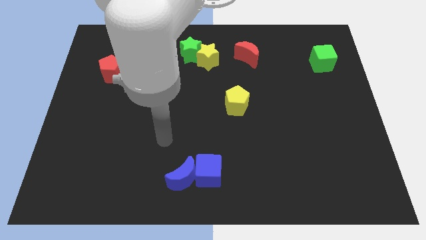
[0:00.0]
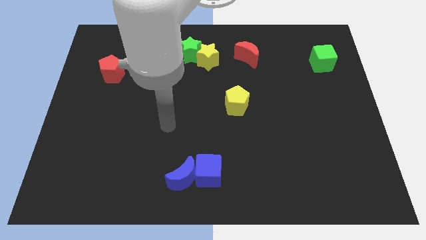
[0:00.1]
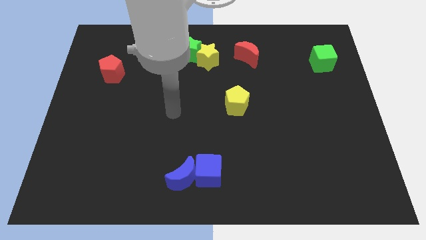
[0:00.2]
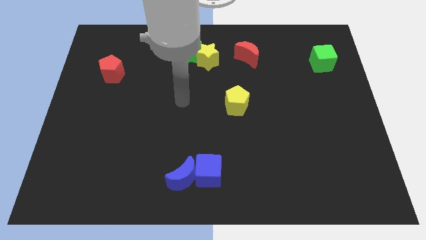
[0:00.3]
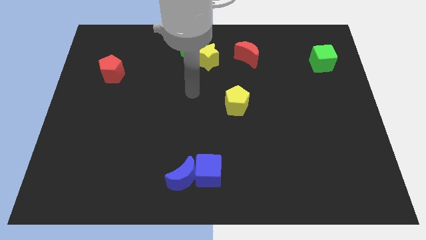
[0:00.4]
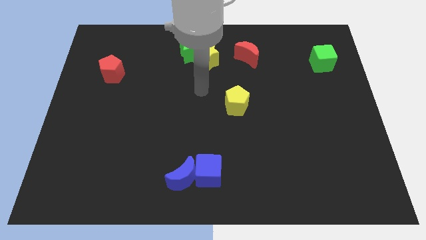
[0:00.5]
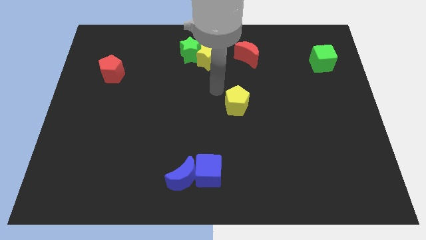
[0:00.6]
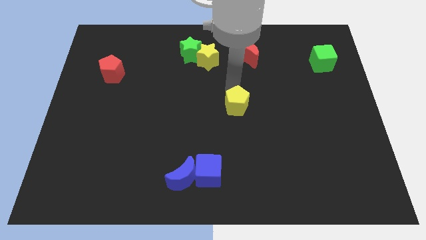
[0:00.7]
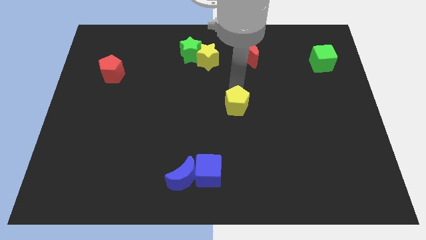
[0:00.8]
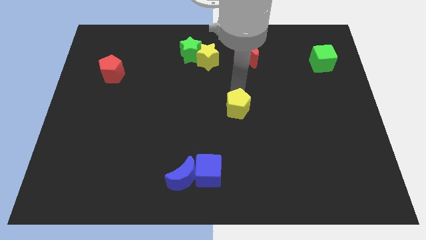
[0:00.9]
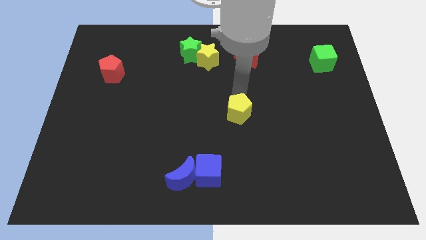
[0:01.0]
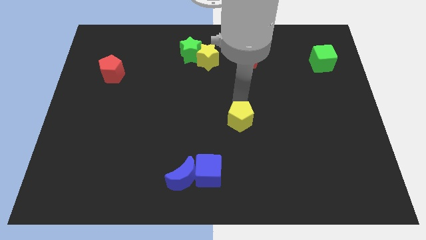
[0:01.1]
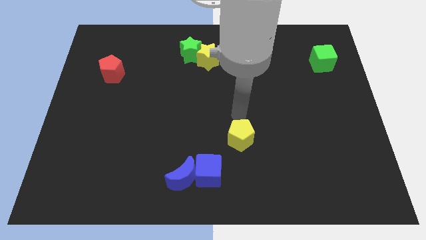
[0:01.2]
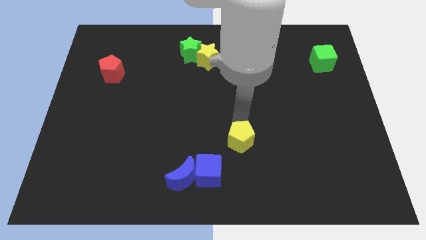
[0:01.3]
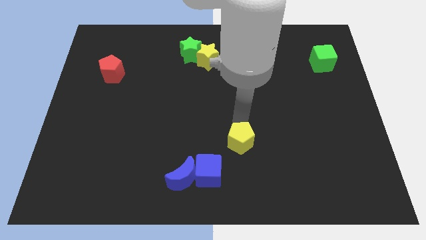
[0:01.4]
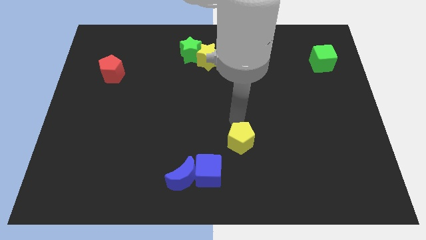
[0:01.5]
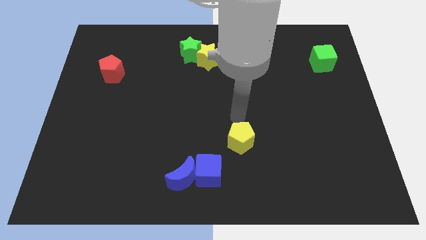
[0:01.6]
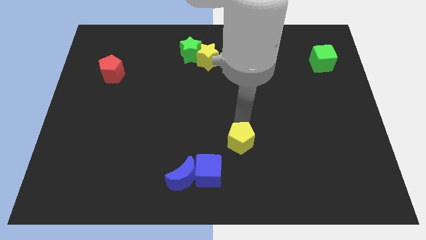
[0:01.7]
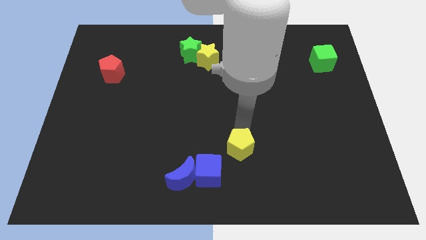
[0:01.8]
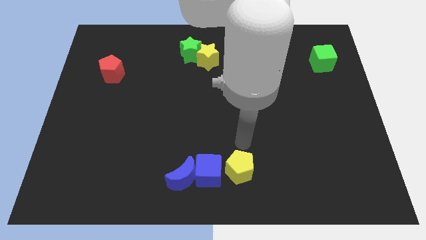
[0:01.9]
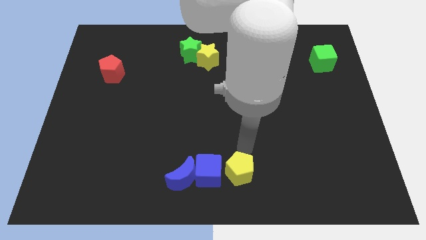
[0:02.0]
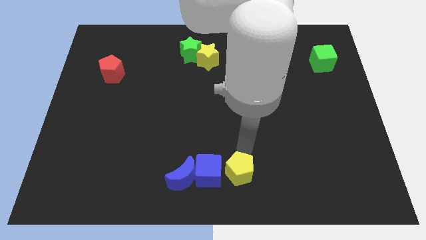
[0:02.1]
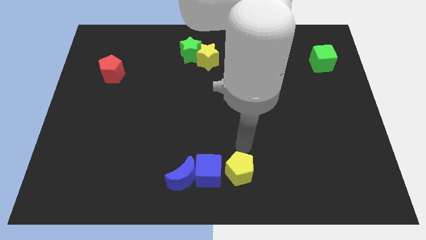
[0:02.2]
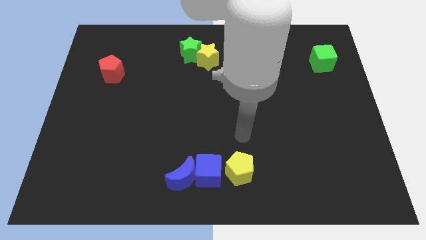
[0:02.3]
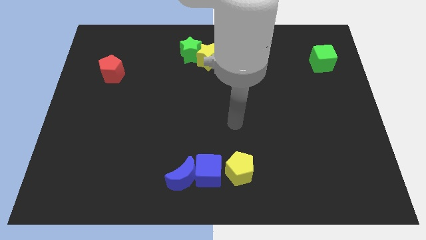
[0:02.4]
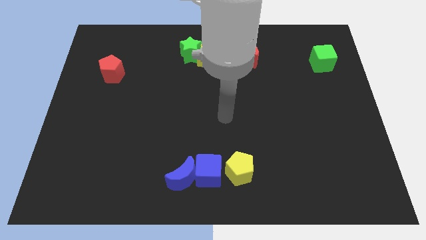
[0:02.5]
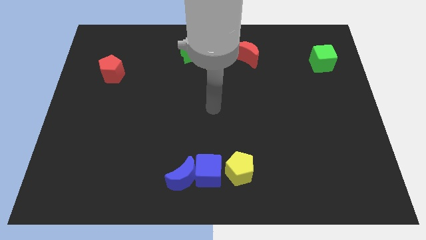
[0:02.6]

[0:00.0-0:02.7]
place the yellow pentagon right to the blue cube

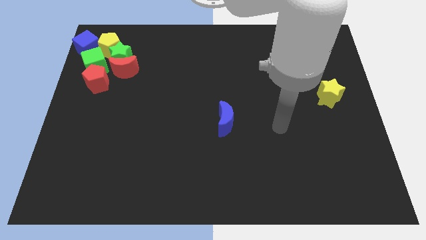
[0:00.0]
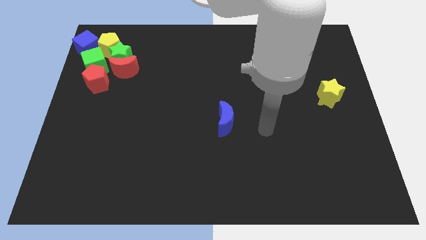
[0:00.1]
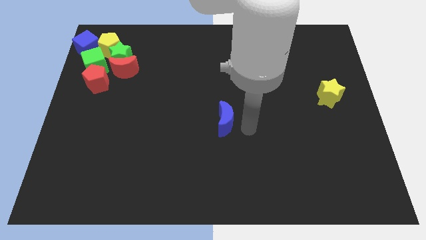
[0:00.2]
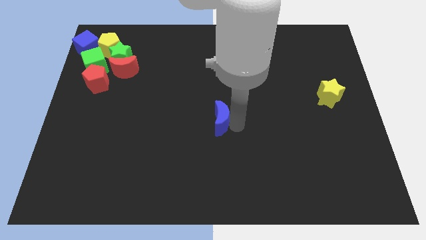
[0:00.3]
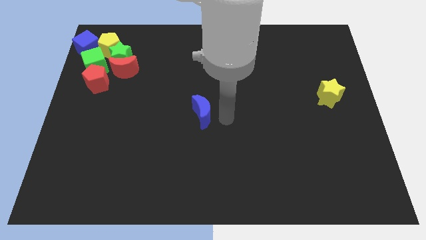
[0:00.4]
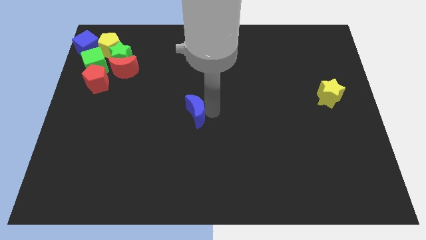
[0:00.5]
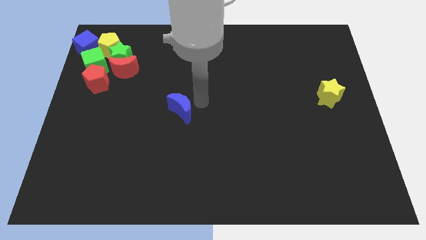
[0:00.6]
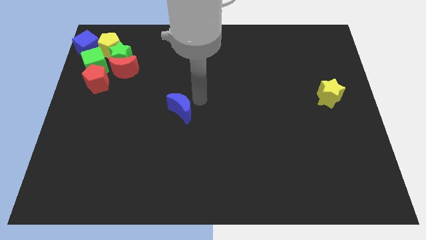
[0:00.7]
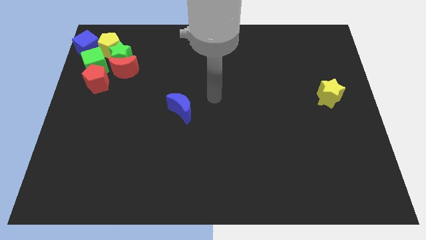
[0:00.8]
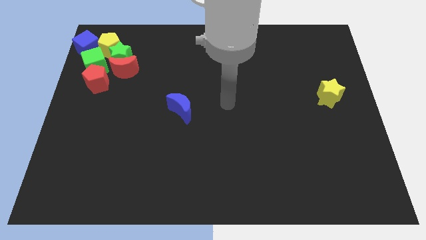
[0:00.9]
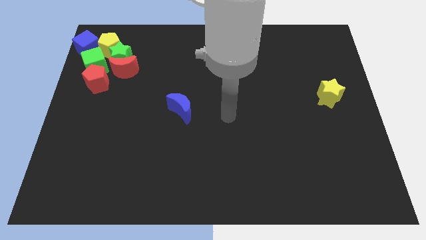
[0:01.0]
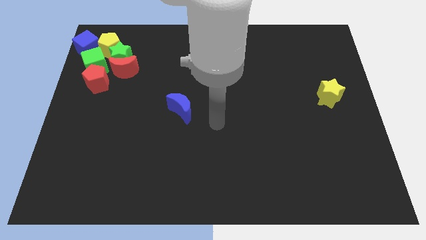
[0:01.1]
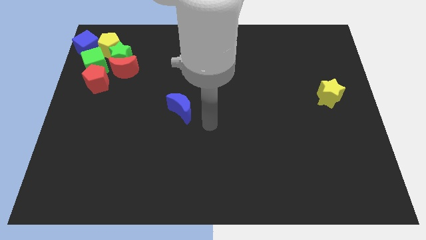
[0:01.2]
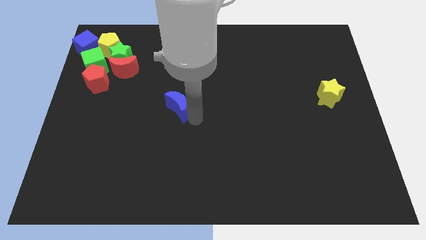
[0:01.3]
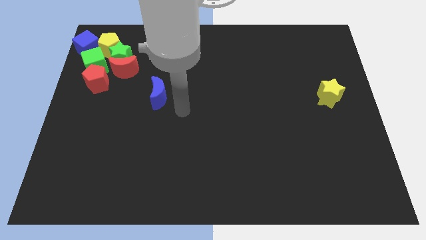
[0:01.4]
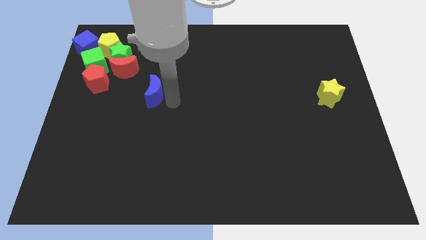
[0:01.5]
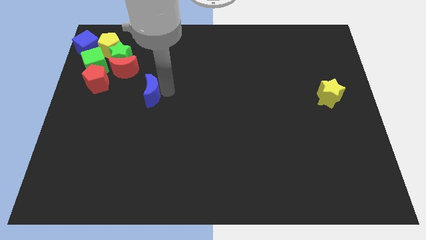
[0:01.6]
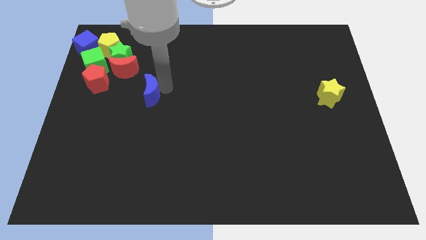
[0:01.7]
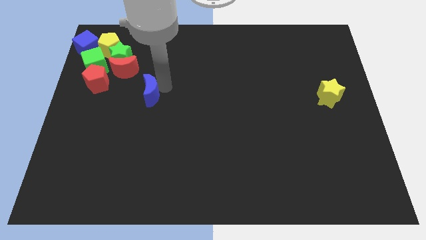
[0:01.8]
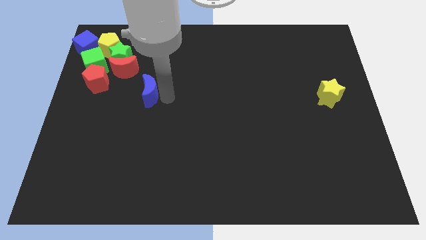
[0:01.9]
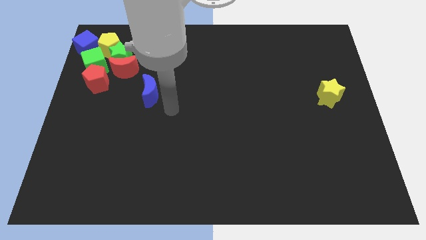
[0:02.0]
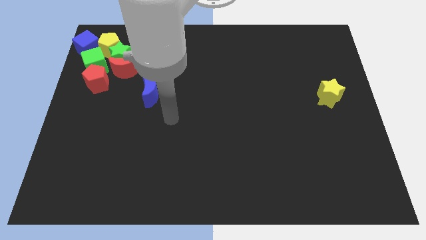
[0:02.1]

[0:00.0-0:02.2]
place the blue moon below the red moon

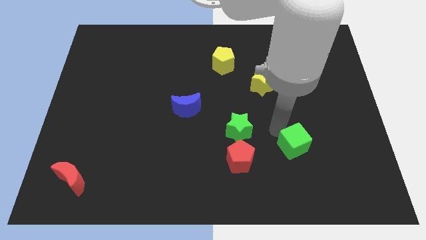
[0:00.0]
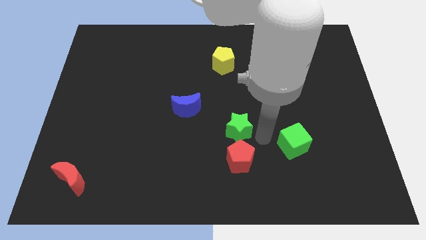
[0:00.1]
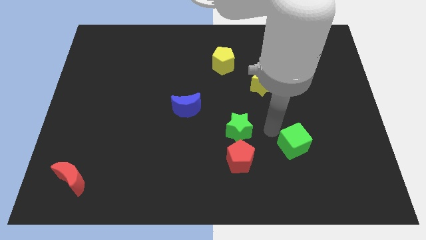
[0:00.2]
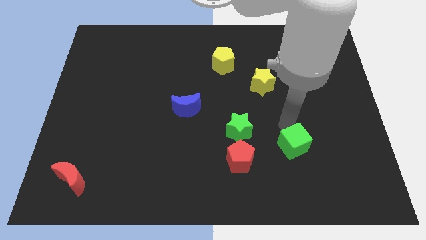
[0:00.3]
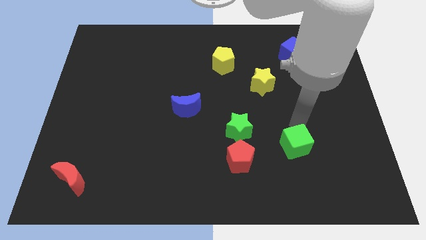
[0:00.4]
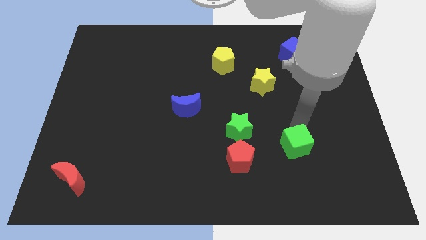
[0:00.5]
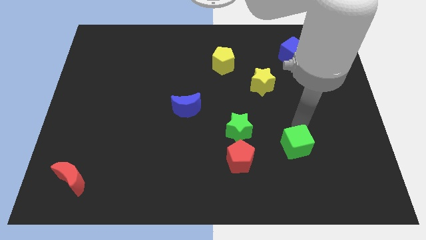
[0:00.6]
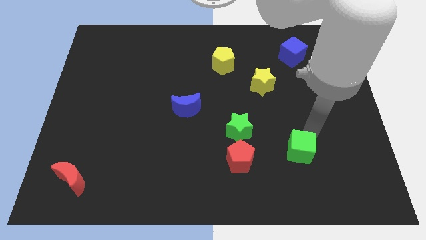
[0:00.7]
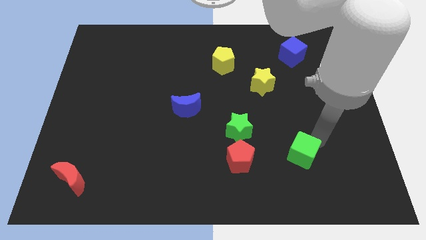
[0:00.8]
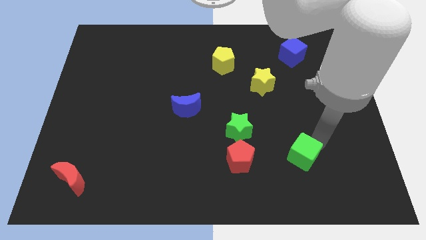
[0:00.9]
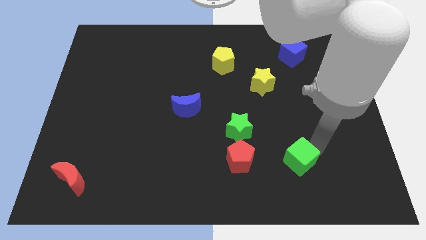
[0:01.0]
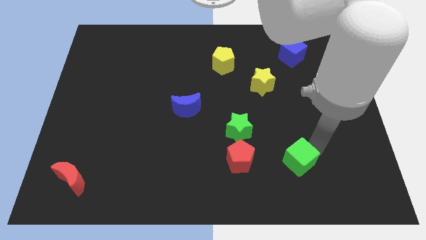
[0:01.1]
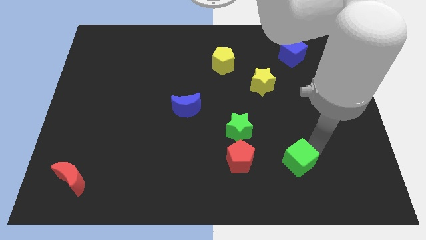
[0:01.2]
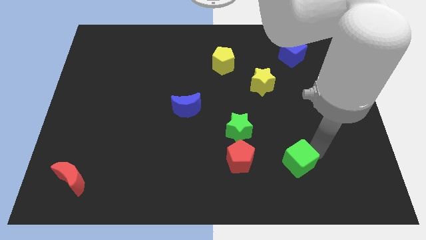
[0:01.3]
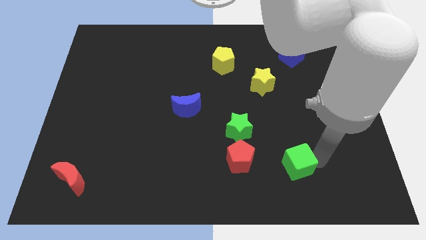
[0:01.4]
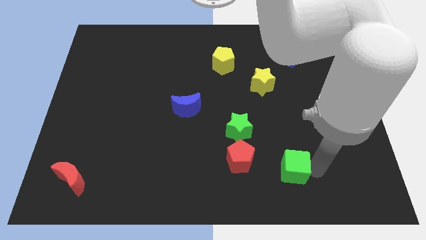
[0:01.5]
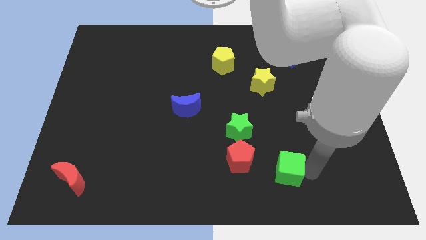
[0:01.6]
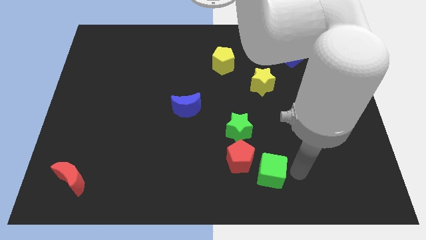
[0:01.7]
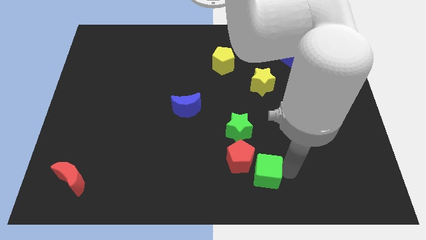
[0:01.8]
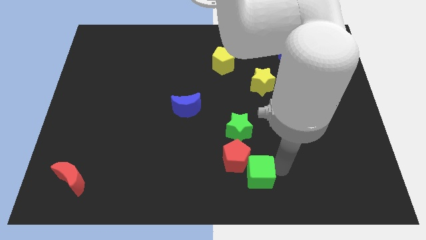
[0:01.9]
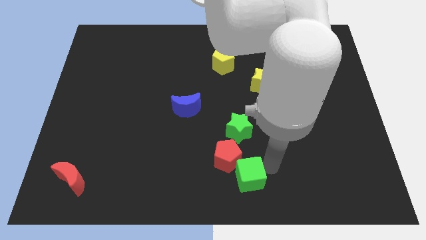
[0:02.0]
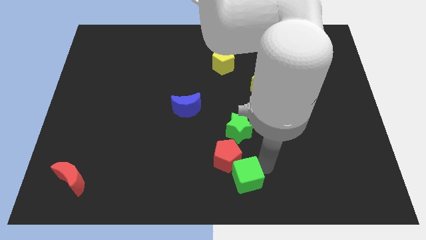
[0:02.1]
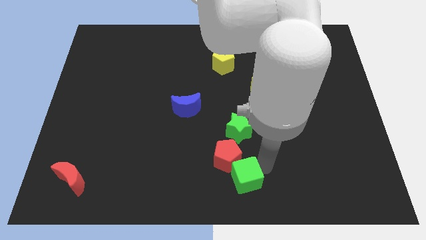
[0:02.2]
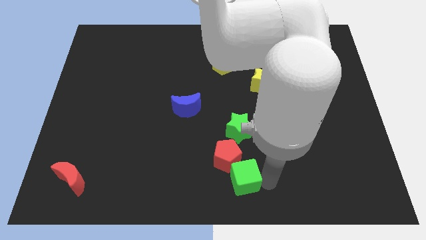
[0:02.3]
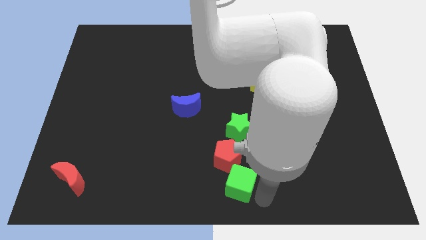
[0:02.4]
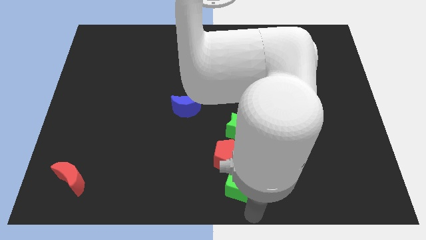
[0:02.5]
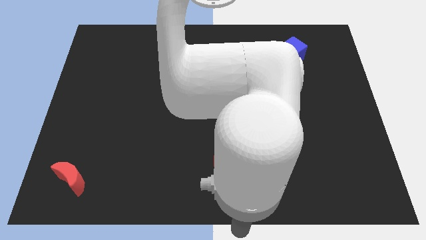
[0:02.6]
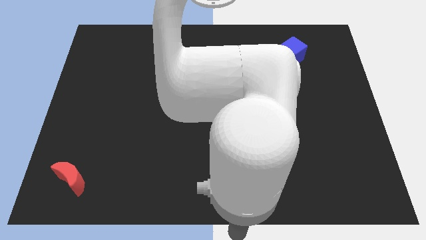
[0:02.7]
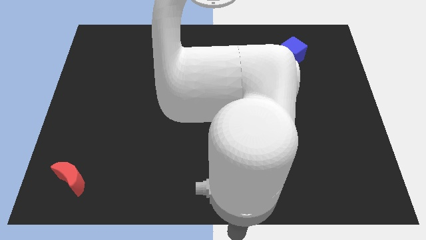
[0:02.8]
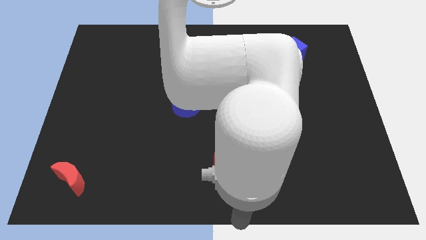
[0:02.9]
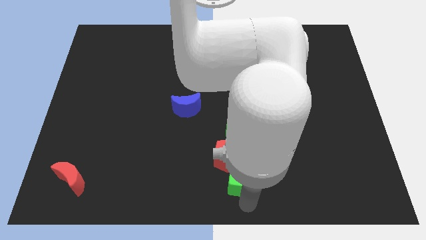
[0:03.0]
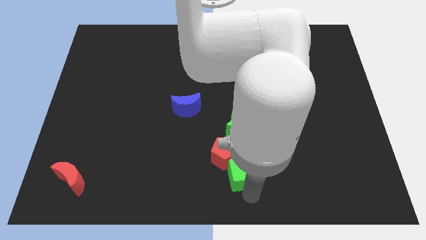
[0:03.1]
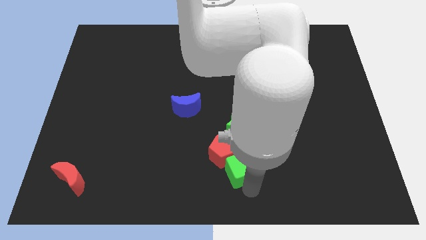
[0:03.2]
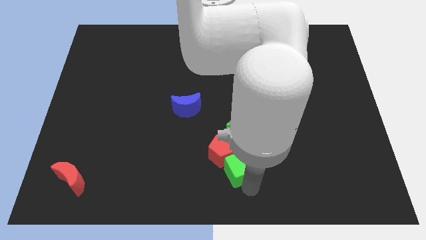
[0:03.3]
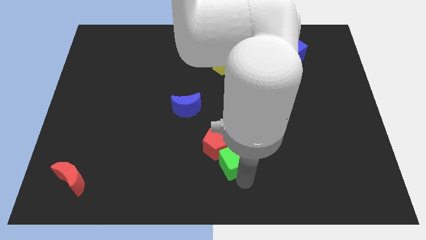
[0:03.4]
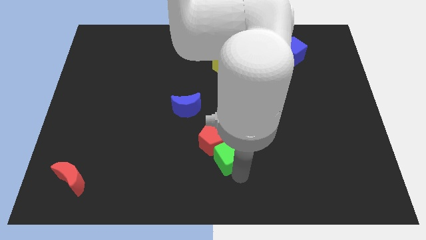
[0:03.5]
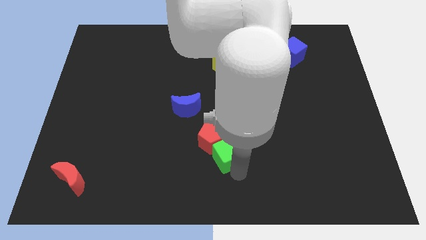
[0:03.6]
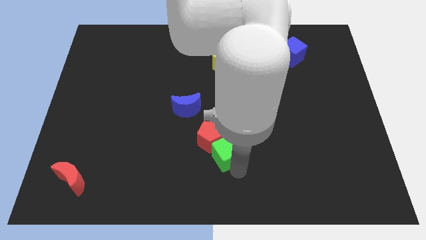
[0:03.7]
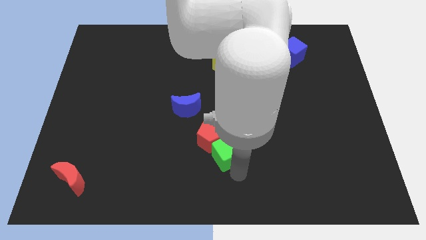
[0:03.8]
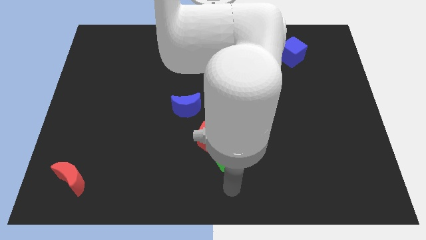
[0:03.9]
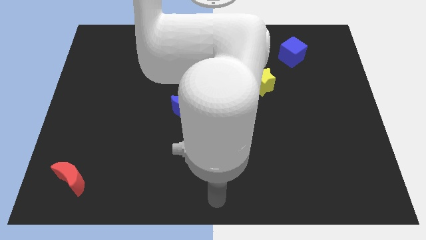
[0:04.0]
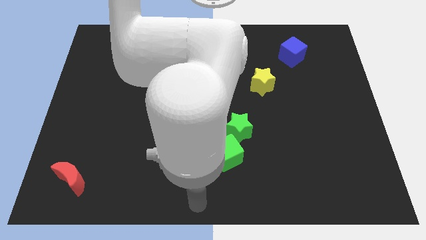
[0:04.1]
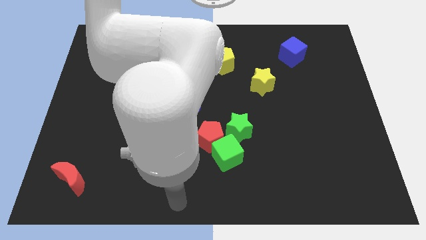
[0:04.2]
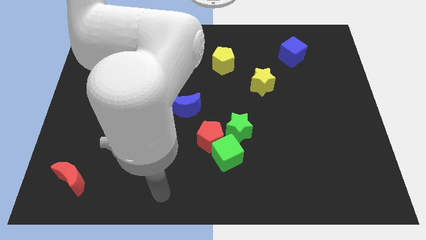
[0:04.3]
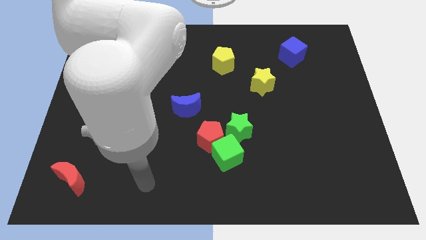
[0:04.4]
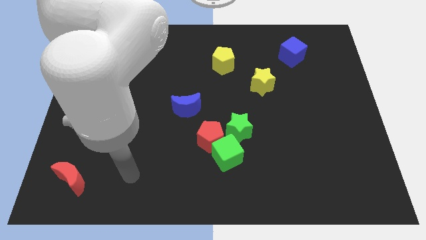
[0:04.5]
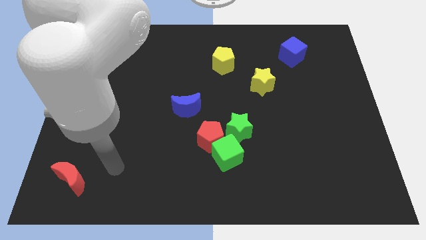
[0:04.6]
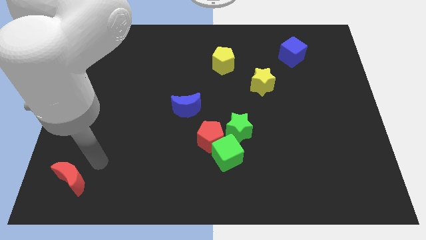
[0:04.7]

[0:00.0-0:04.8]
push the green cube into the red pentagon
